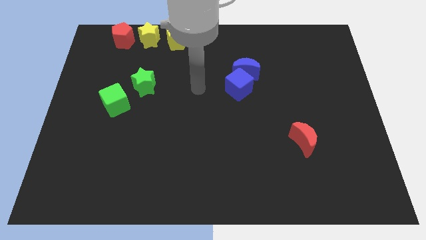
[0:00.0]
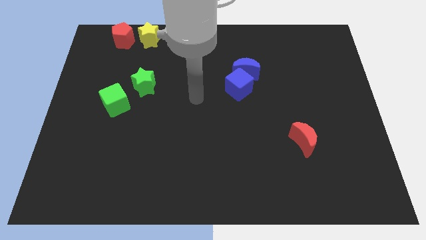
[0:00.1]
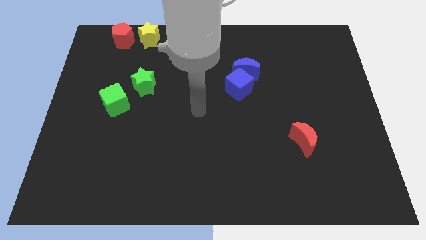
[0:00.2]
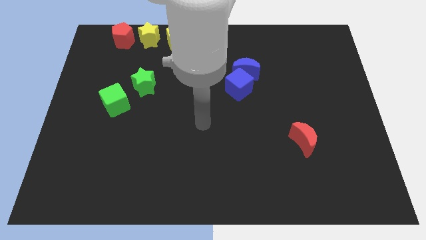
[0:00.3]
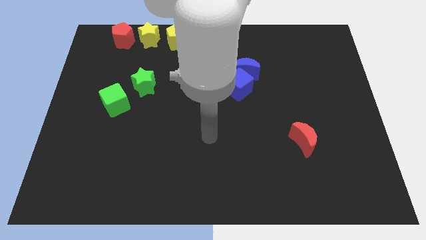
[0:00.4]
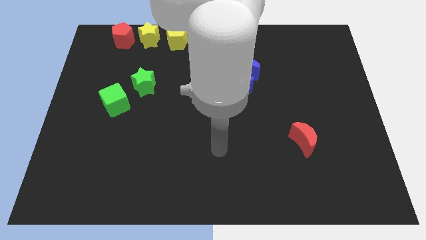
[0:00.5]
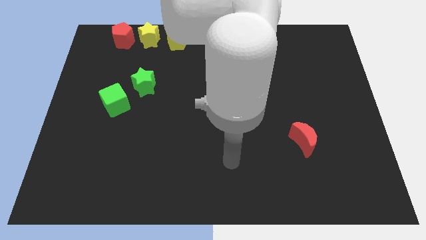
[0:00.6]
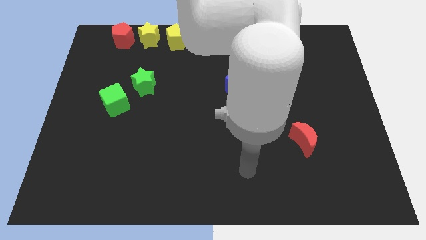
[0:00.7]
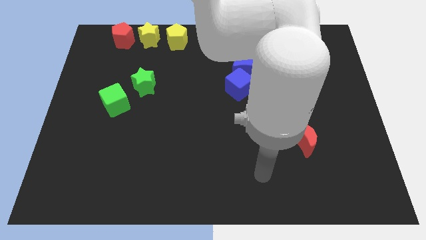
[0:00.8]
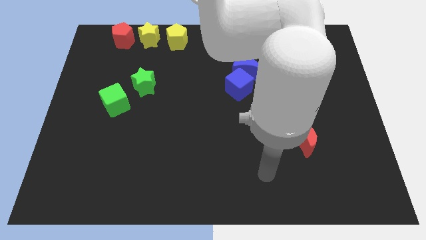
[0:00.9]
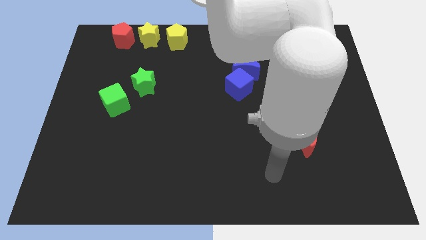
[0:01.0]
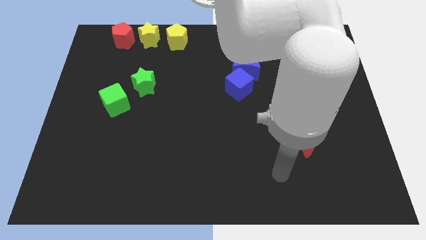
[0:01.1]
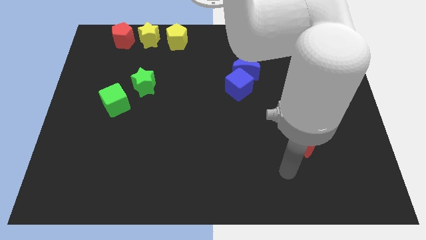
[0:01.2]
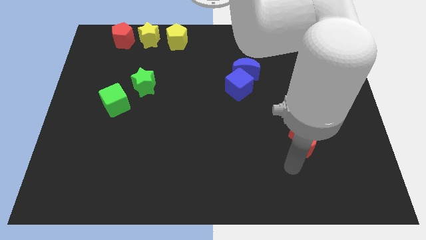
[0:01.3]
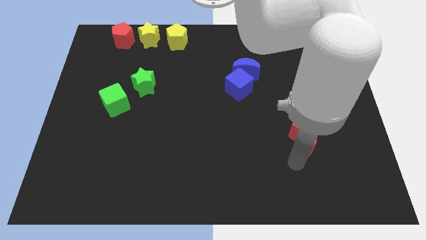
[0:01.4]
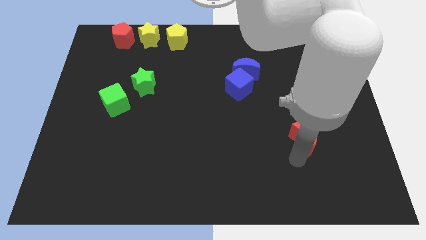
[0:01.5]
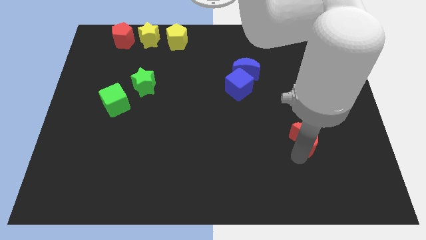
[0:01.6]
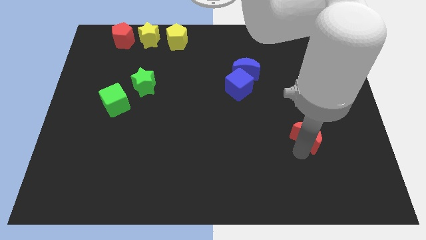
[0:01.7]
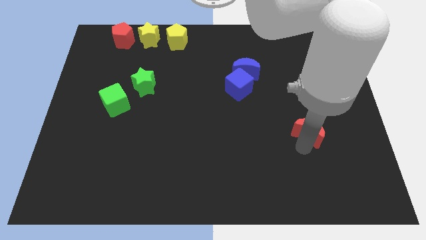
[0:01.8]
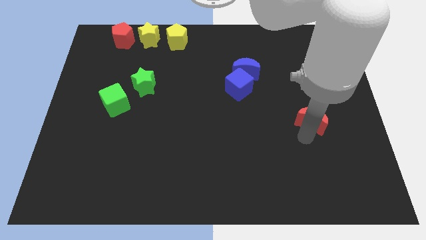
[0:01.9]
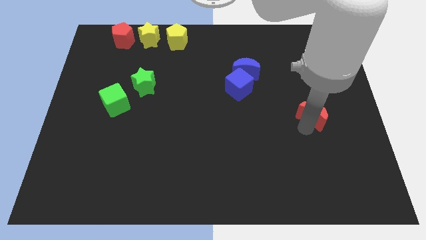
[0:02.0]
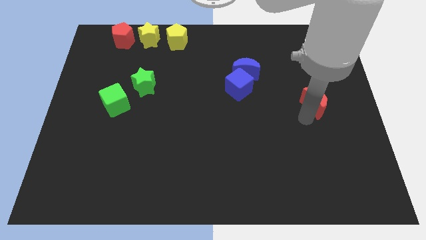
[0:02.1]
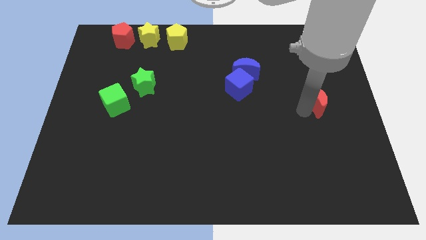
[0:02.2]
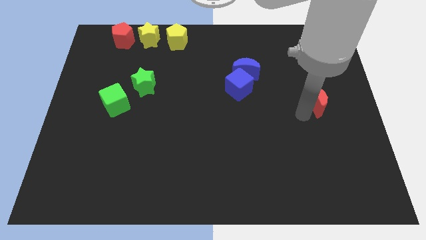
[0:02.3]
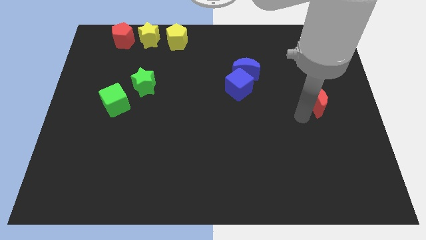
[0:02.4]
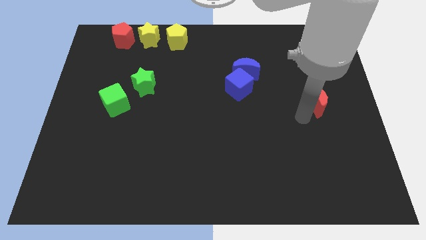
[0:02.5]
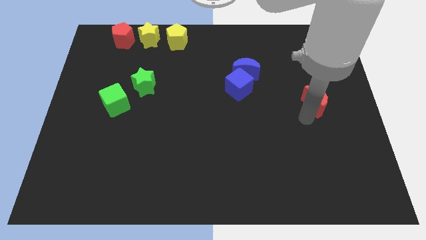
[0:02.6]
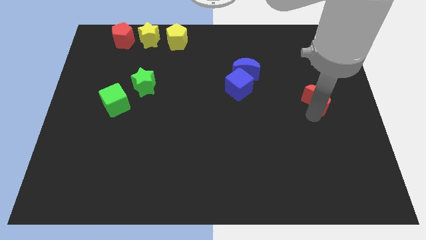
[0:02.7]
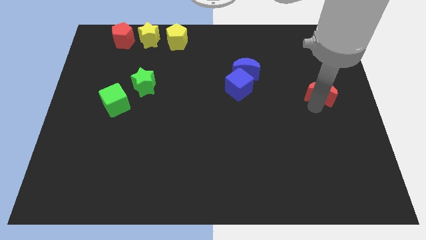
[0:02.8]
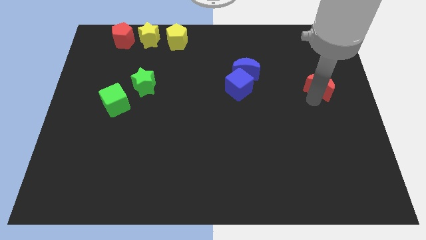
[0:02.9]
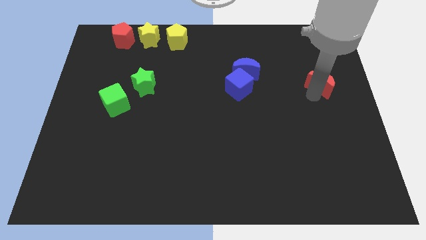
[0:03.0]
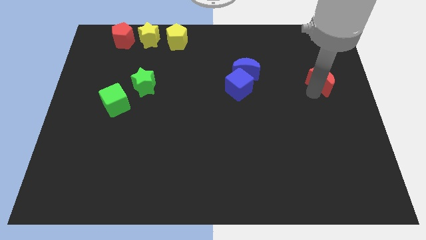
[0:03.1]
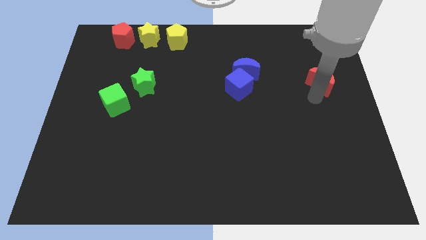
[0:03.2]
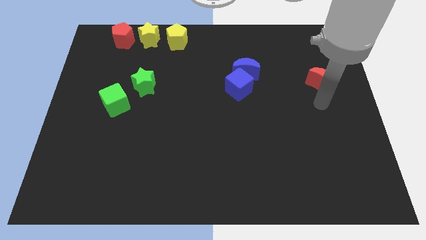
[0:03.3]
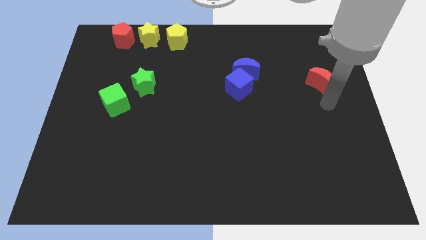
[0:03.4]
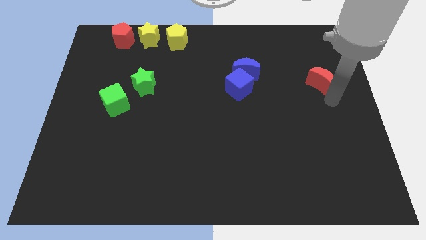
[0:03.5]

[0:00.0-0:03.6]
place the red moon right to the blue moon

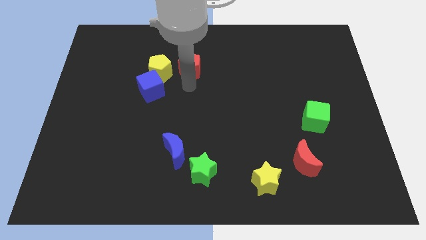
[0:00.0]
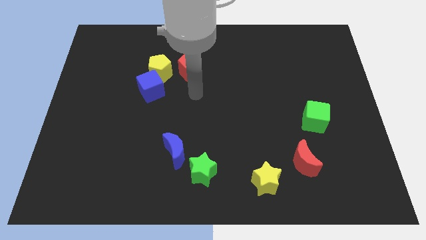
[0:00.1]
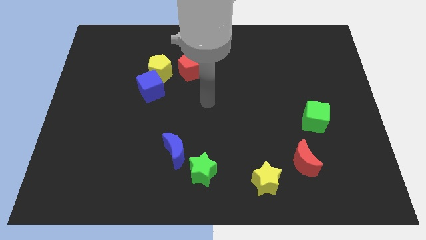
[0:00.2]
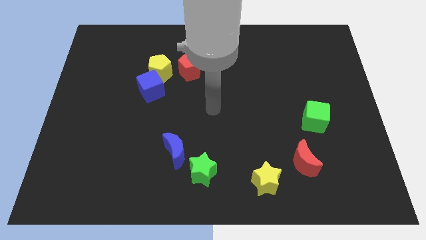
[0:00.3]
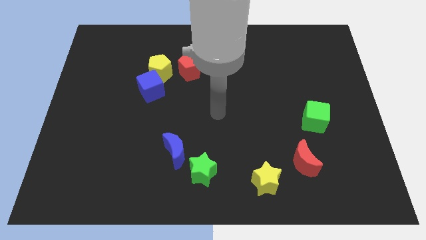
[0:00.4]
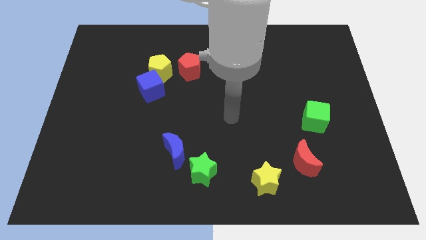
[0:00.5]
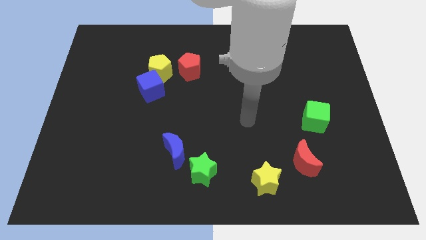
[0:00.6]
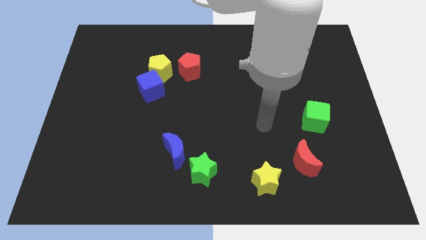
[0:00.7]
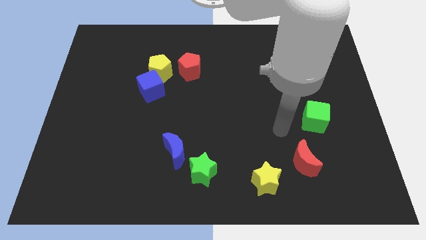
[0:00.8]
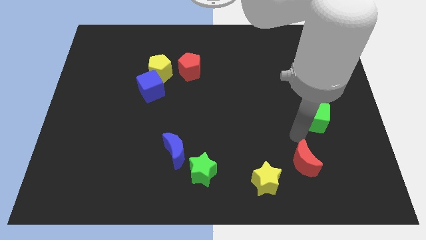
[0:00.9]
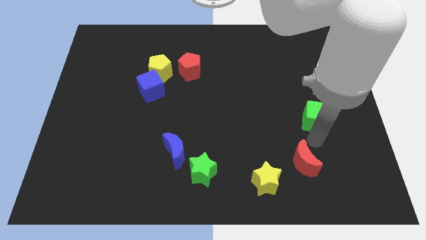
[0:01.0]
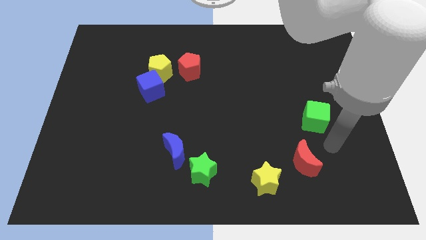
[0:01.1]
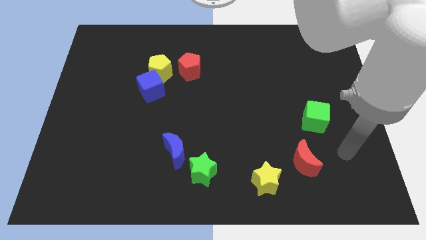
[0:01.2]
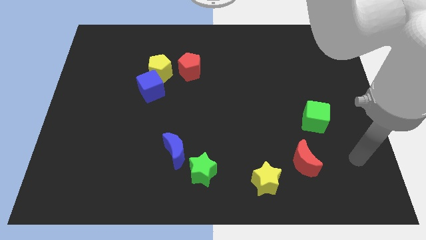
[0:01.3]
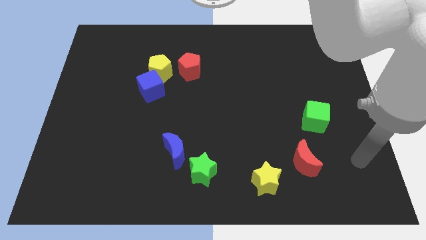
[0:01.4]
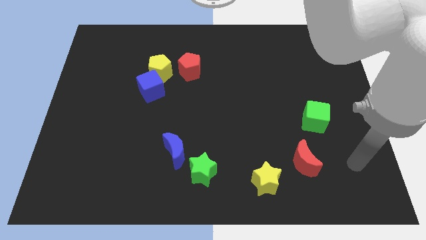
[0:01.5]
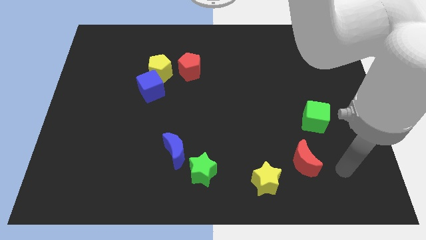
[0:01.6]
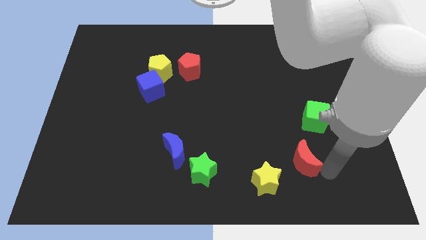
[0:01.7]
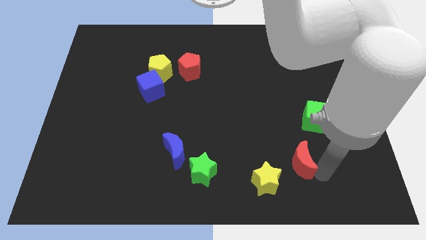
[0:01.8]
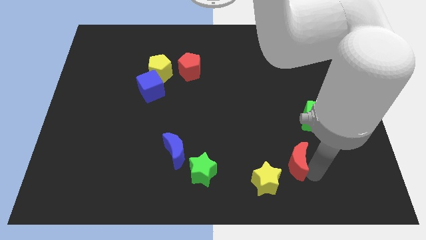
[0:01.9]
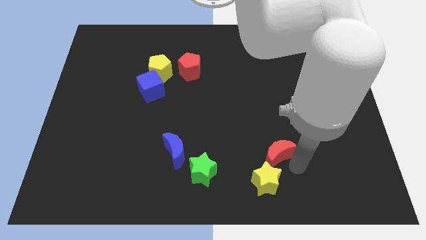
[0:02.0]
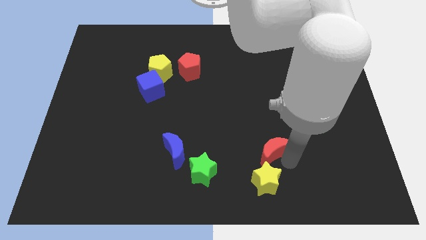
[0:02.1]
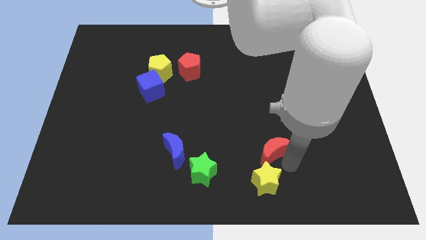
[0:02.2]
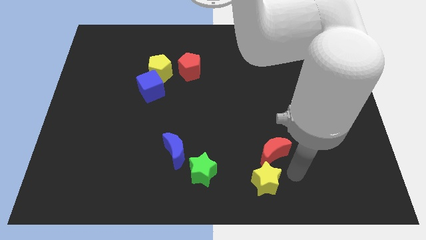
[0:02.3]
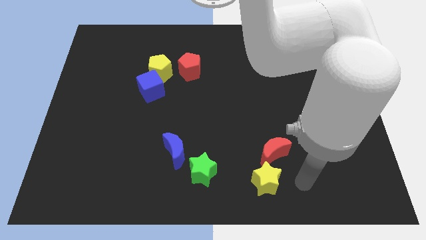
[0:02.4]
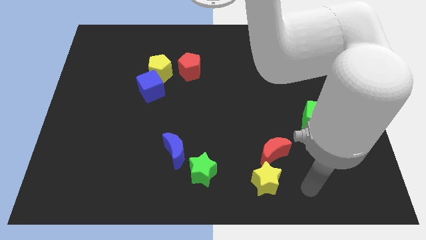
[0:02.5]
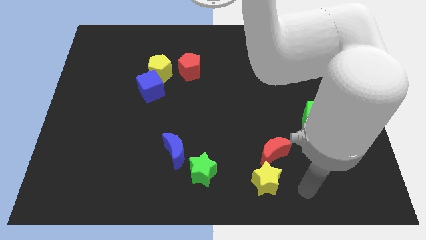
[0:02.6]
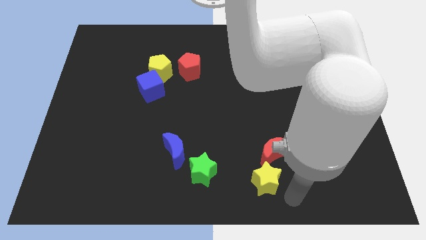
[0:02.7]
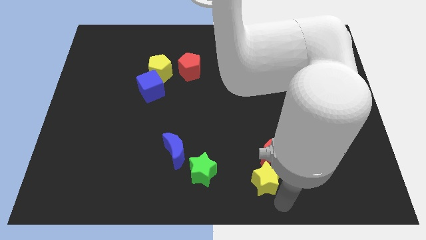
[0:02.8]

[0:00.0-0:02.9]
push the red crescent slightly to top of the yellow star

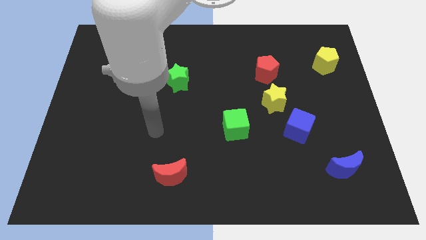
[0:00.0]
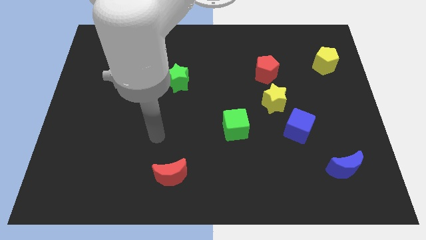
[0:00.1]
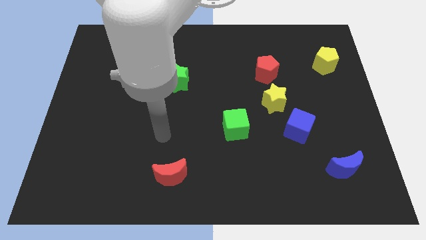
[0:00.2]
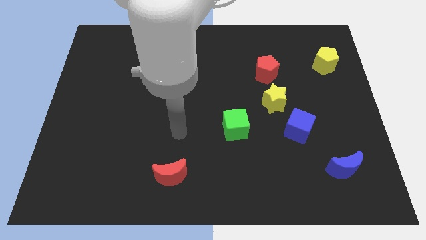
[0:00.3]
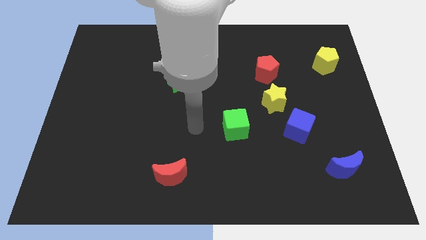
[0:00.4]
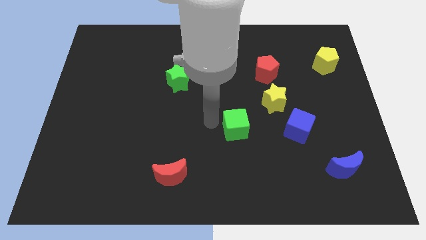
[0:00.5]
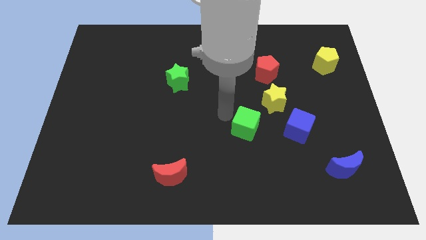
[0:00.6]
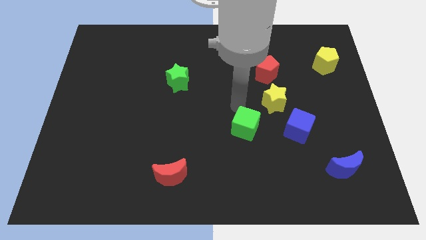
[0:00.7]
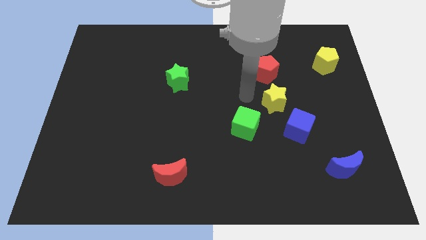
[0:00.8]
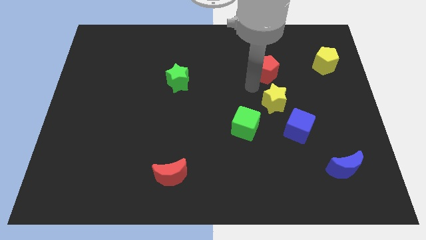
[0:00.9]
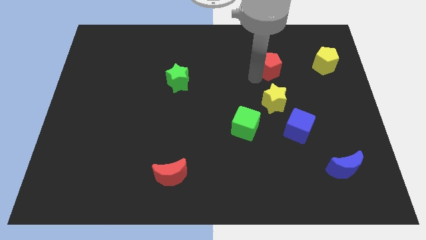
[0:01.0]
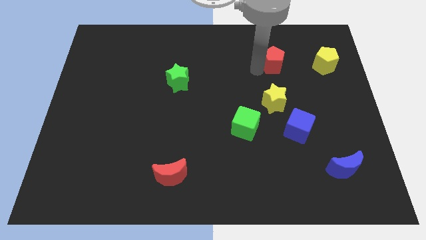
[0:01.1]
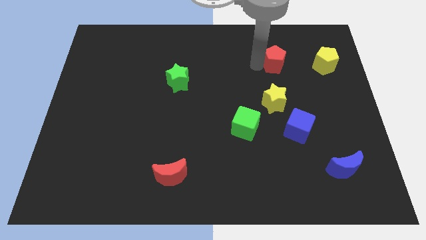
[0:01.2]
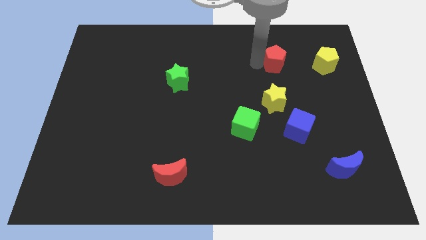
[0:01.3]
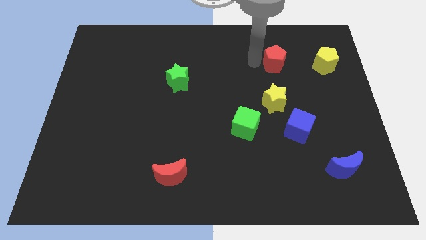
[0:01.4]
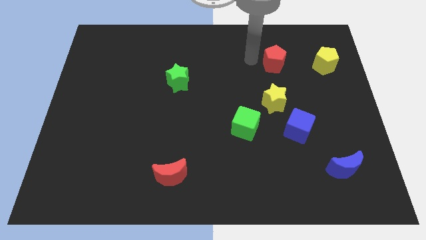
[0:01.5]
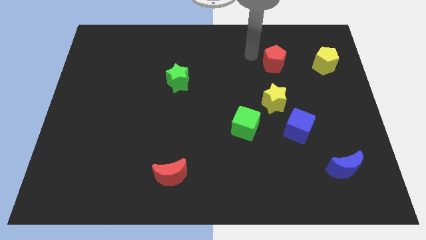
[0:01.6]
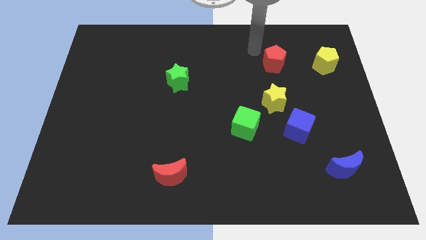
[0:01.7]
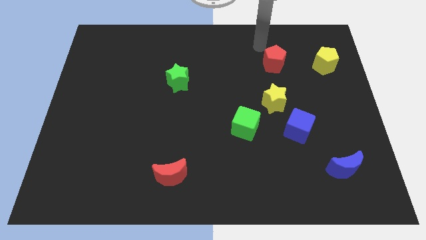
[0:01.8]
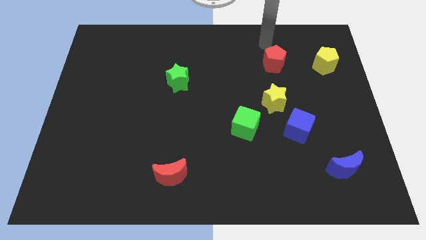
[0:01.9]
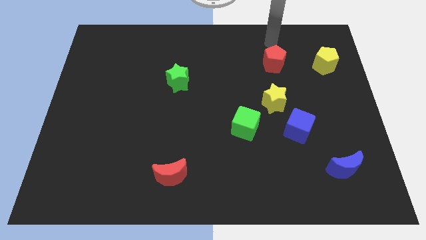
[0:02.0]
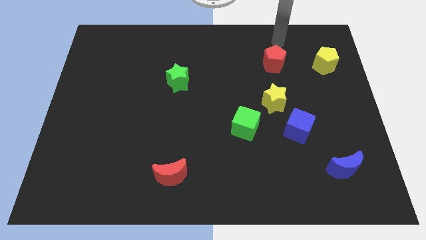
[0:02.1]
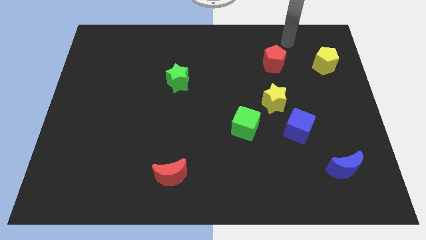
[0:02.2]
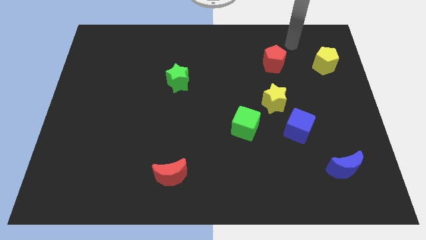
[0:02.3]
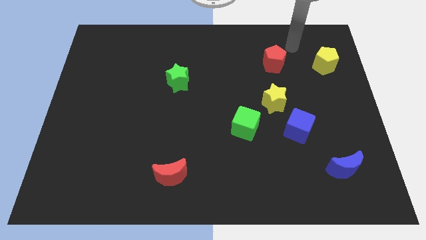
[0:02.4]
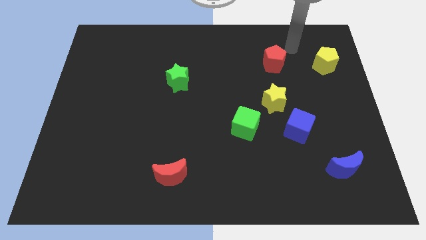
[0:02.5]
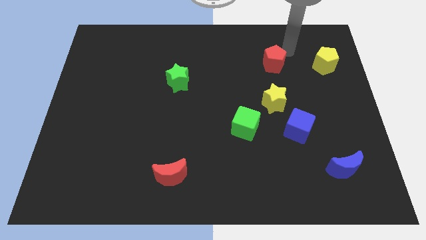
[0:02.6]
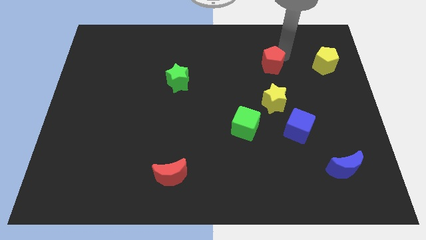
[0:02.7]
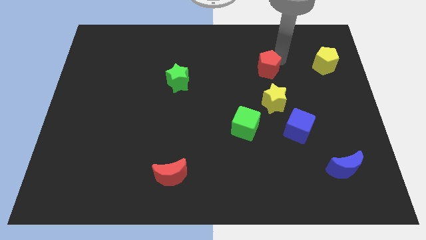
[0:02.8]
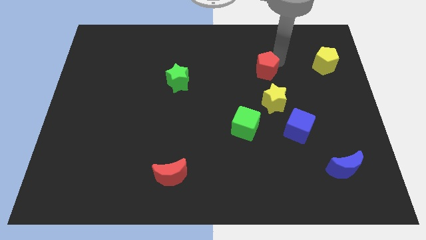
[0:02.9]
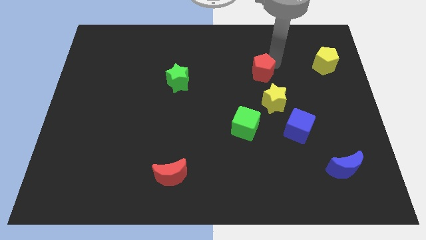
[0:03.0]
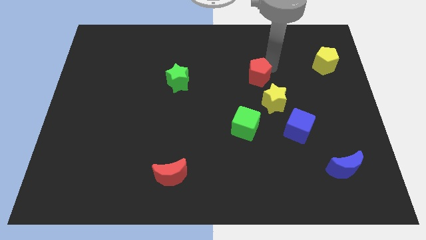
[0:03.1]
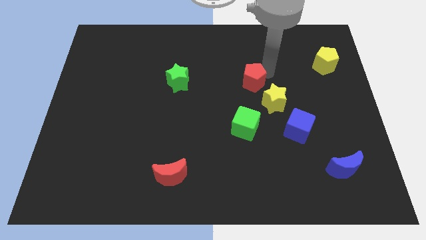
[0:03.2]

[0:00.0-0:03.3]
move red pentagon near yellow star
